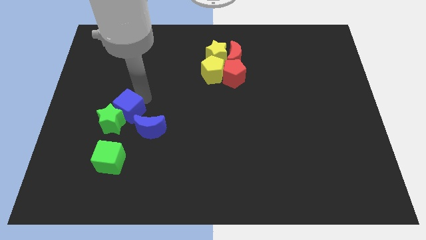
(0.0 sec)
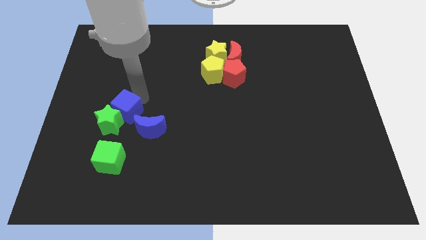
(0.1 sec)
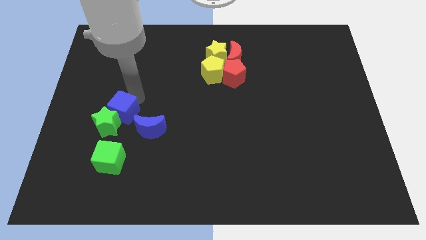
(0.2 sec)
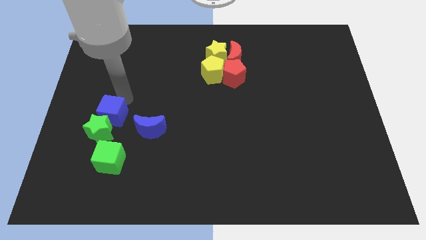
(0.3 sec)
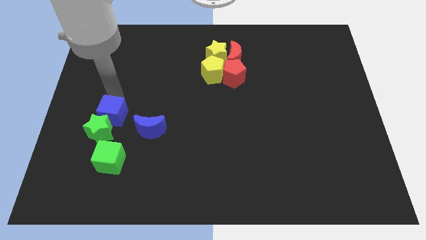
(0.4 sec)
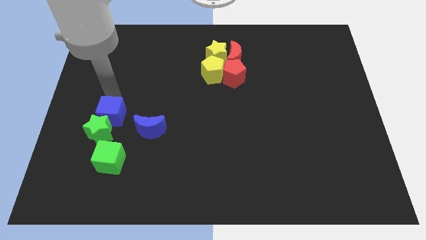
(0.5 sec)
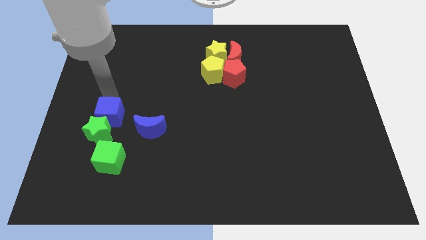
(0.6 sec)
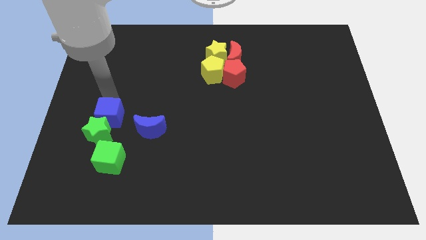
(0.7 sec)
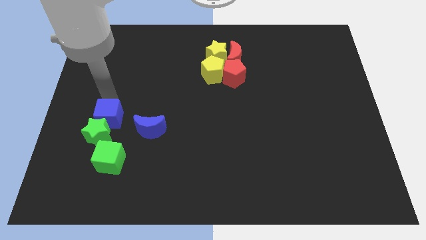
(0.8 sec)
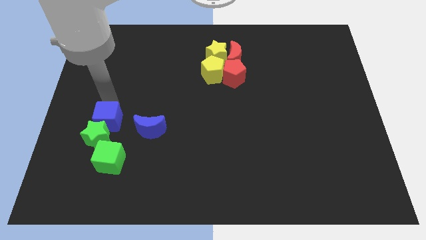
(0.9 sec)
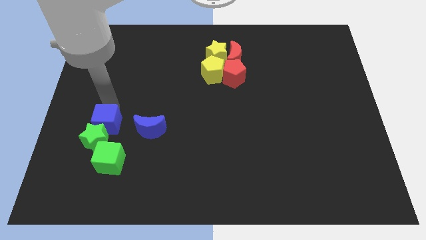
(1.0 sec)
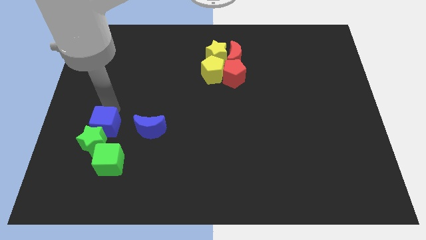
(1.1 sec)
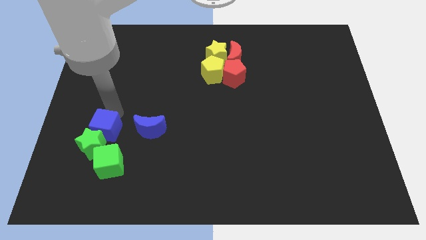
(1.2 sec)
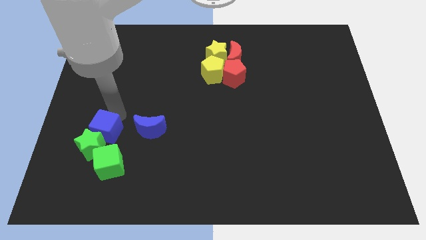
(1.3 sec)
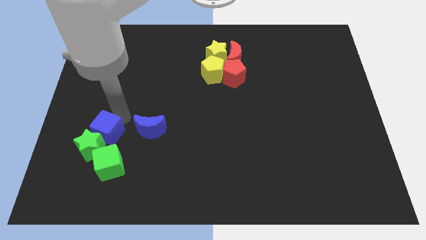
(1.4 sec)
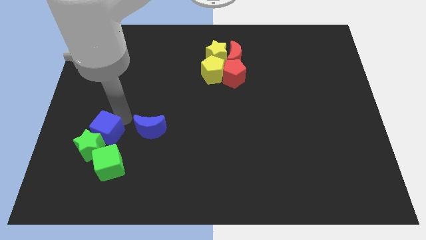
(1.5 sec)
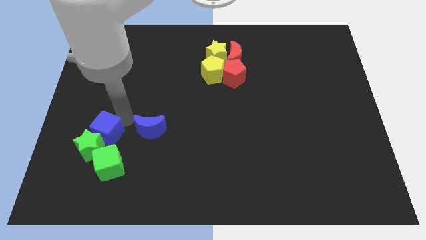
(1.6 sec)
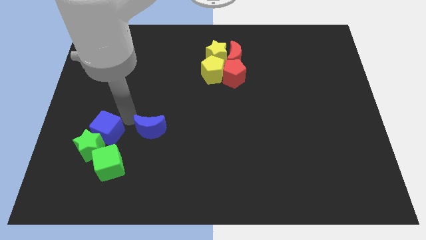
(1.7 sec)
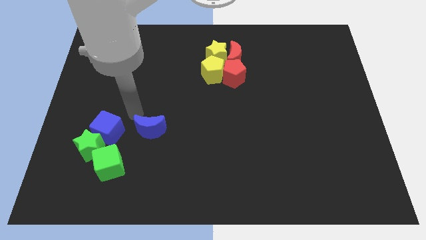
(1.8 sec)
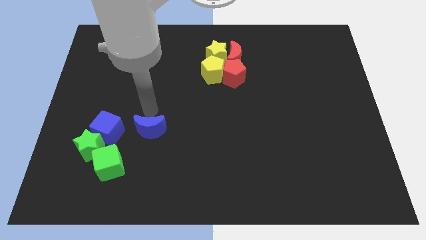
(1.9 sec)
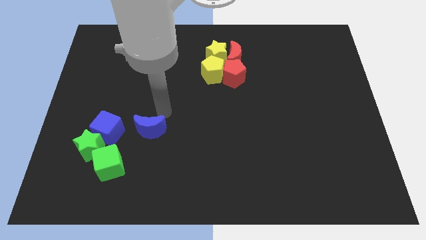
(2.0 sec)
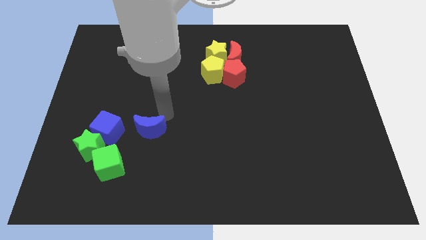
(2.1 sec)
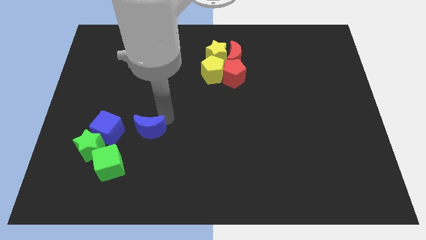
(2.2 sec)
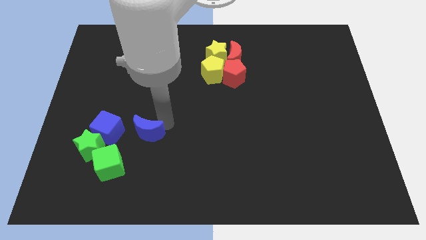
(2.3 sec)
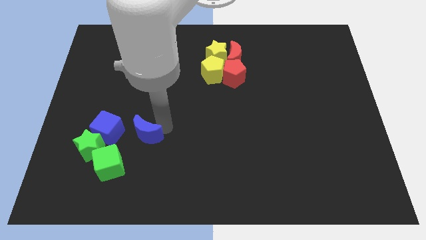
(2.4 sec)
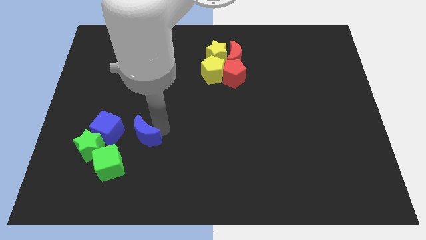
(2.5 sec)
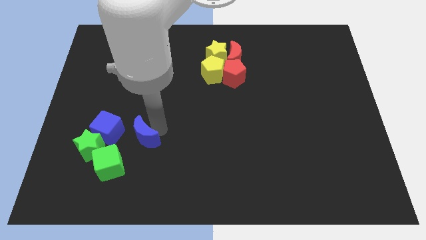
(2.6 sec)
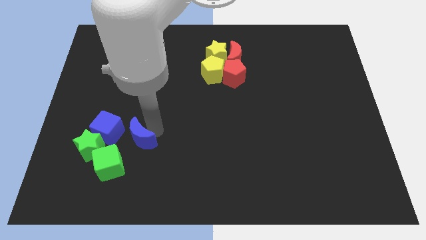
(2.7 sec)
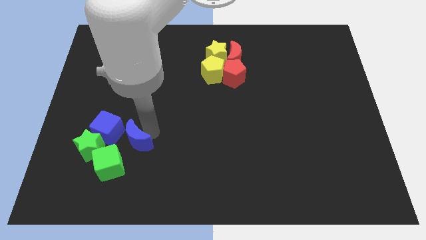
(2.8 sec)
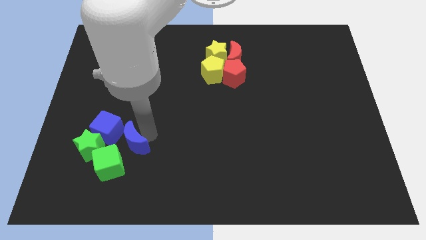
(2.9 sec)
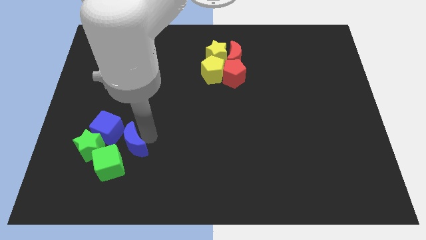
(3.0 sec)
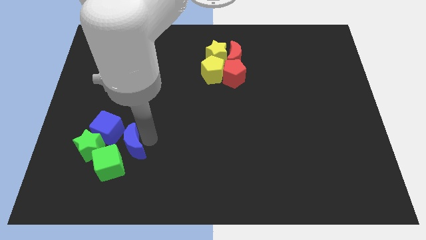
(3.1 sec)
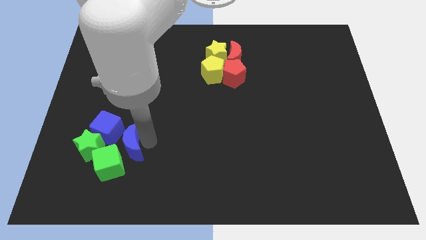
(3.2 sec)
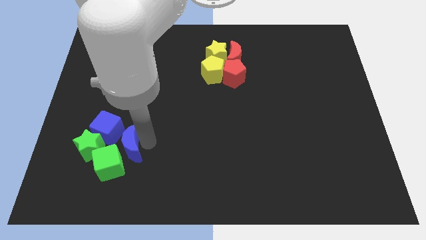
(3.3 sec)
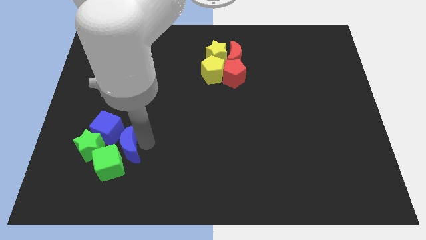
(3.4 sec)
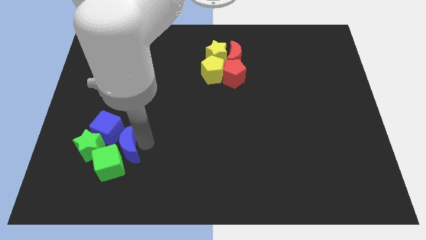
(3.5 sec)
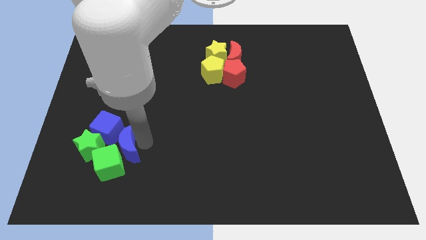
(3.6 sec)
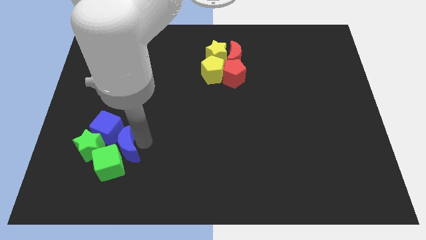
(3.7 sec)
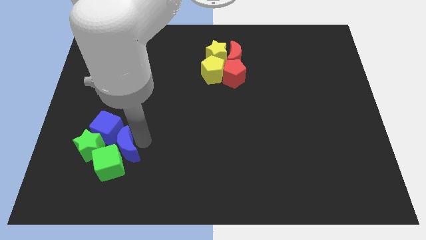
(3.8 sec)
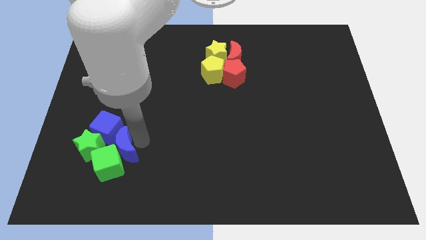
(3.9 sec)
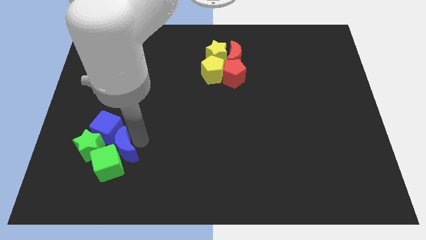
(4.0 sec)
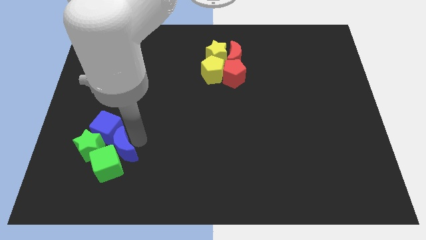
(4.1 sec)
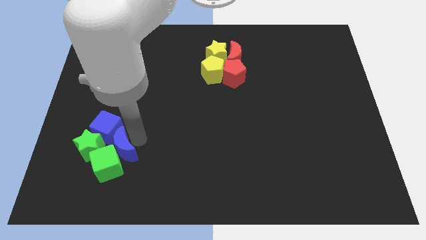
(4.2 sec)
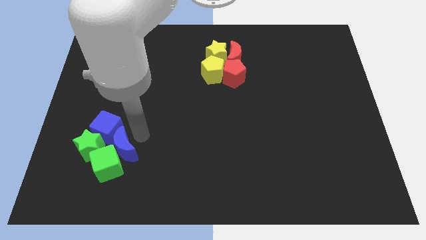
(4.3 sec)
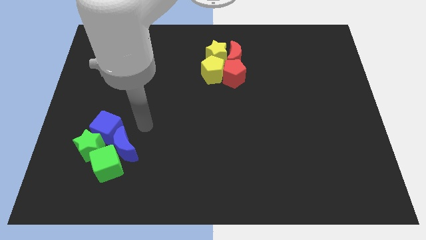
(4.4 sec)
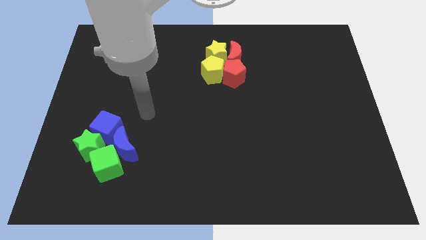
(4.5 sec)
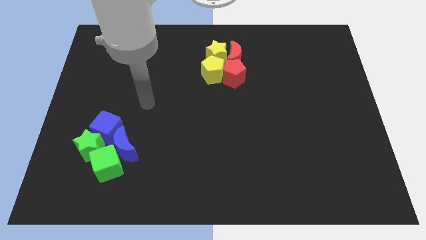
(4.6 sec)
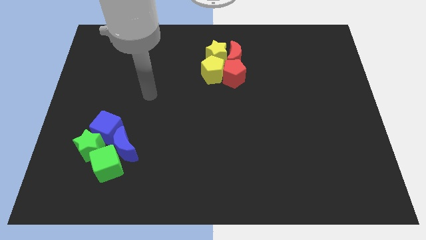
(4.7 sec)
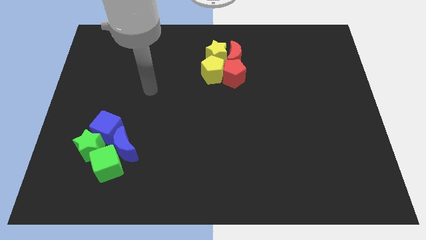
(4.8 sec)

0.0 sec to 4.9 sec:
move the blue and green blocks towards the bottom left of the board

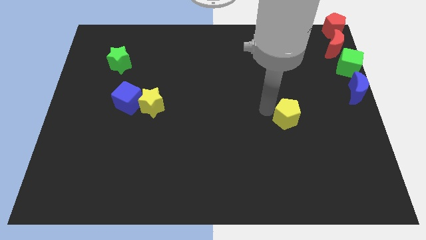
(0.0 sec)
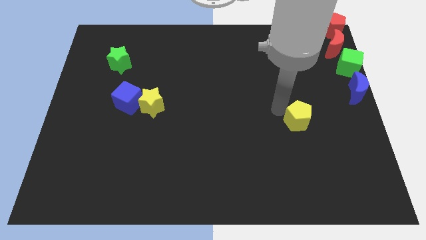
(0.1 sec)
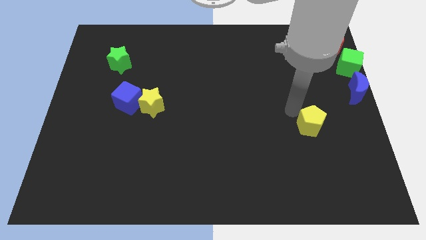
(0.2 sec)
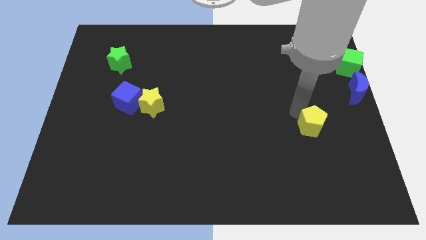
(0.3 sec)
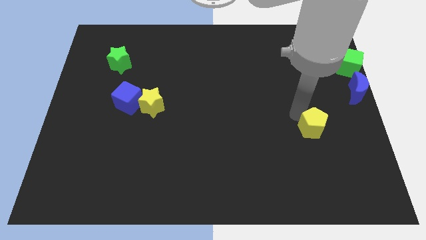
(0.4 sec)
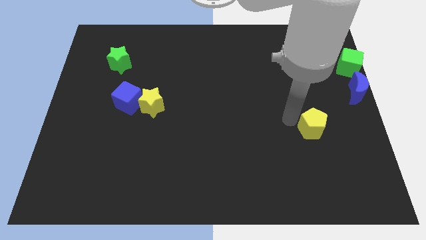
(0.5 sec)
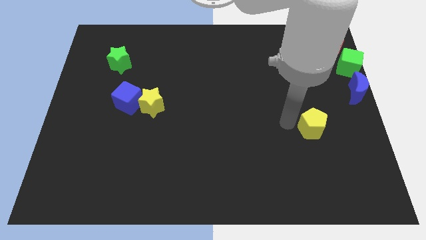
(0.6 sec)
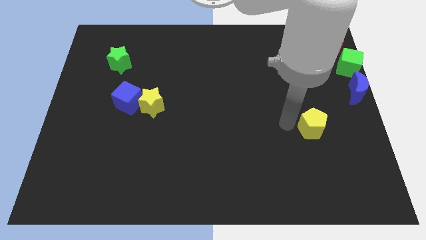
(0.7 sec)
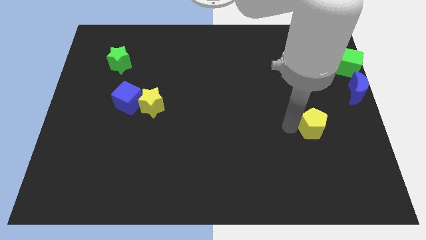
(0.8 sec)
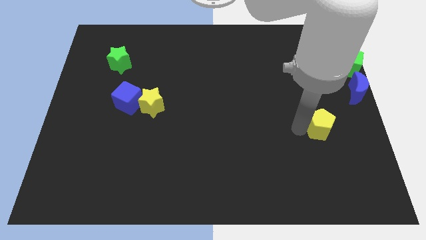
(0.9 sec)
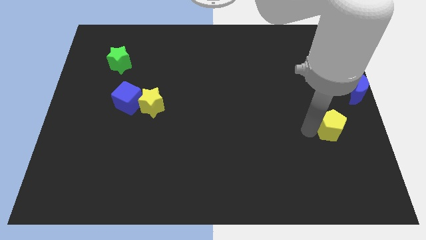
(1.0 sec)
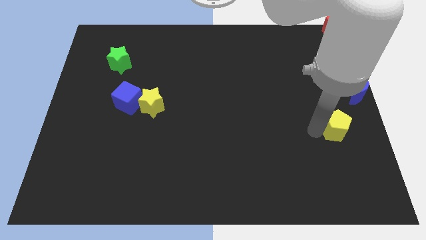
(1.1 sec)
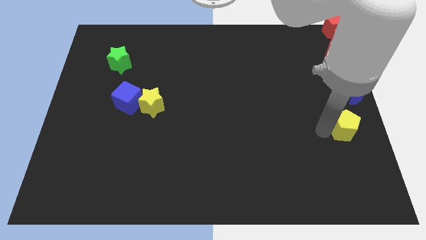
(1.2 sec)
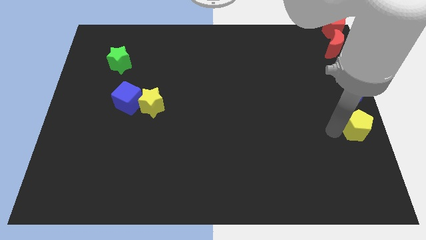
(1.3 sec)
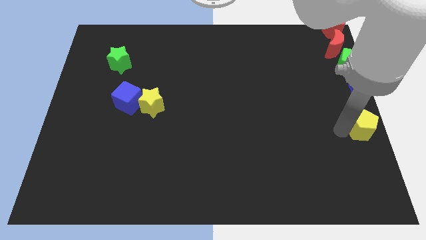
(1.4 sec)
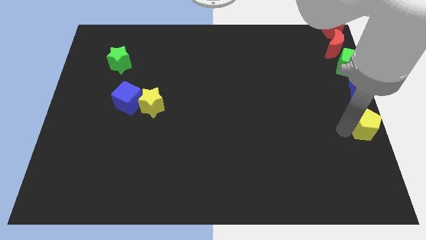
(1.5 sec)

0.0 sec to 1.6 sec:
place the yellow pentagon below the blue moon

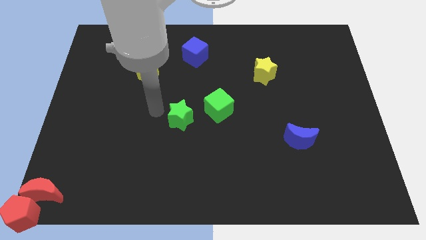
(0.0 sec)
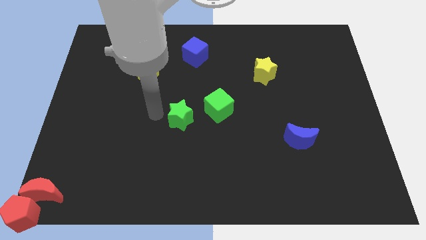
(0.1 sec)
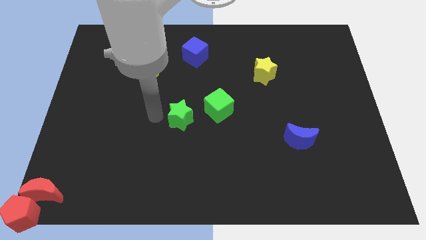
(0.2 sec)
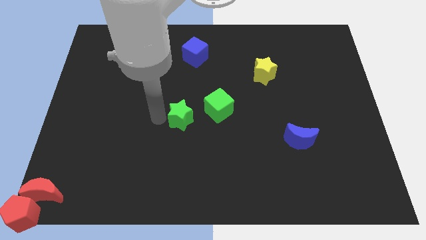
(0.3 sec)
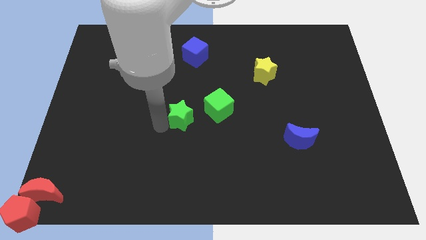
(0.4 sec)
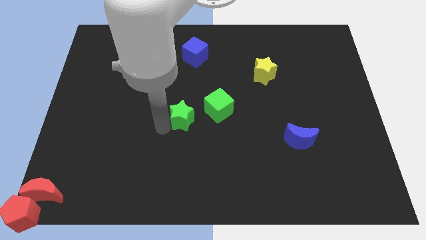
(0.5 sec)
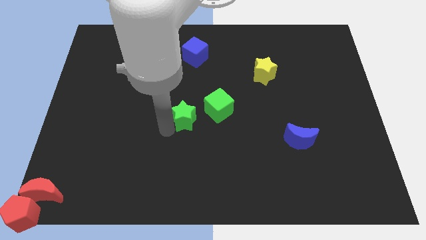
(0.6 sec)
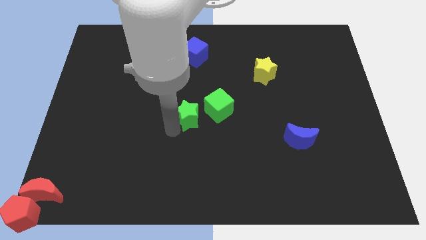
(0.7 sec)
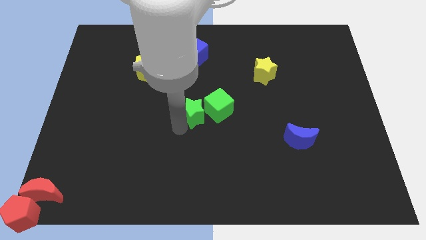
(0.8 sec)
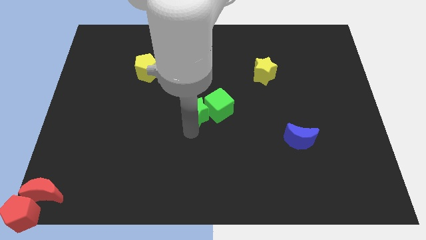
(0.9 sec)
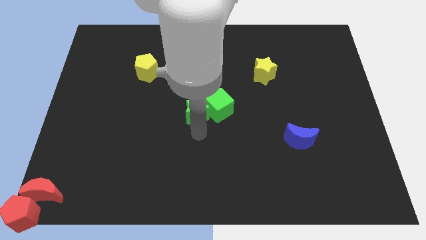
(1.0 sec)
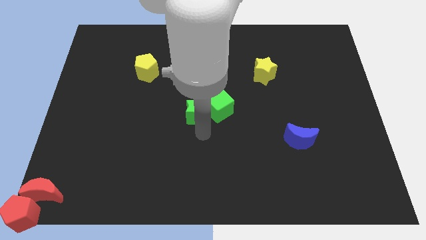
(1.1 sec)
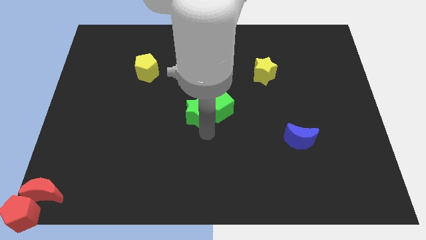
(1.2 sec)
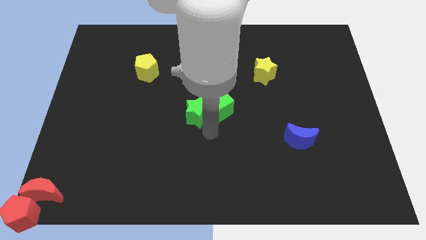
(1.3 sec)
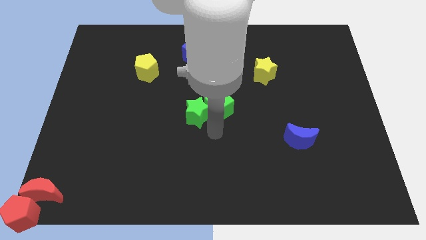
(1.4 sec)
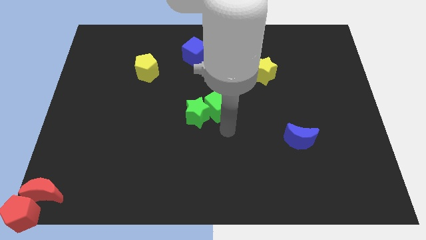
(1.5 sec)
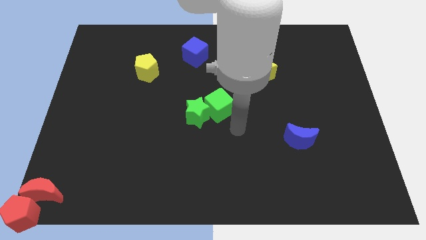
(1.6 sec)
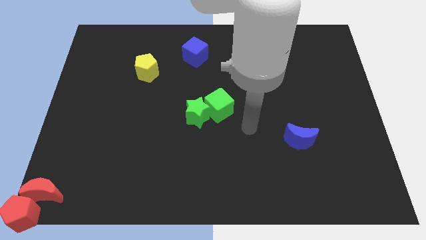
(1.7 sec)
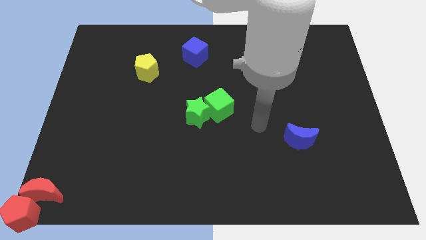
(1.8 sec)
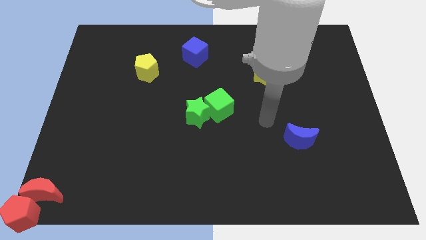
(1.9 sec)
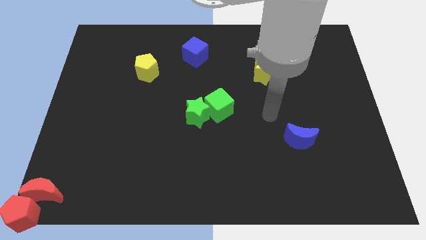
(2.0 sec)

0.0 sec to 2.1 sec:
push green star close to green cube

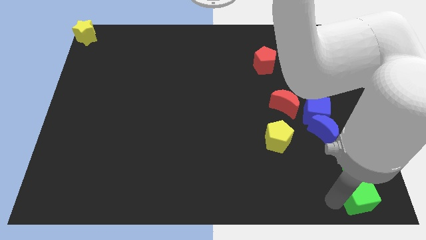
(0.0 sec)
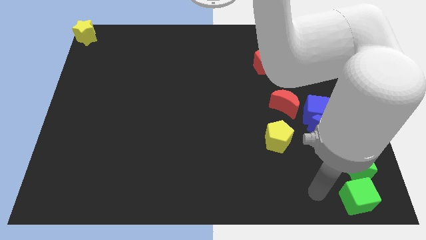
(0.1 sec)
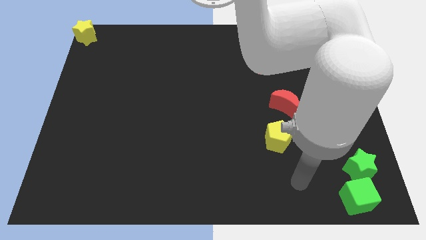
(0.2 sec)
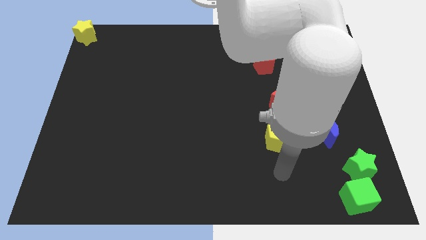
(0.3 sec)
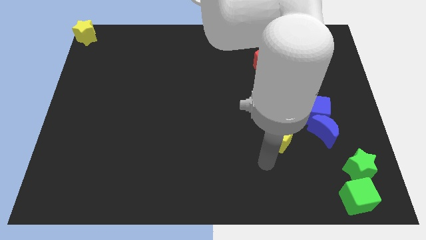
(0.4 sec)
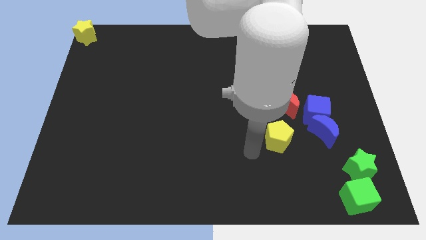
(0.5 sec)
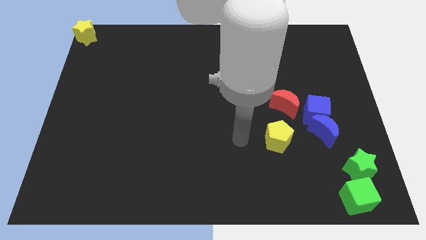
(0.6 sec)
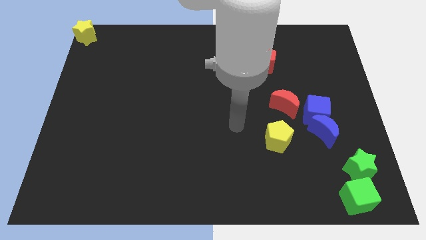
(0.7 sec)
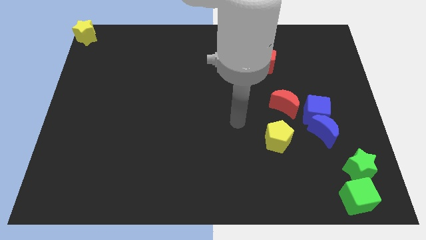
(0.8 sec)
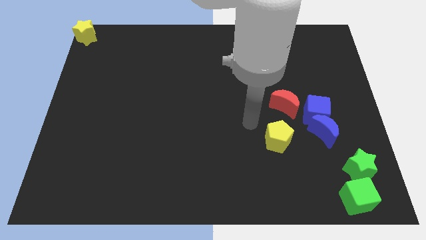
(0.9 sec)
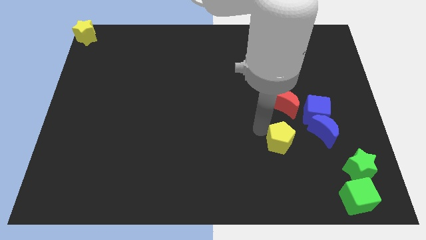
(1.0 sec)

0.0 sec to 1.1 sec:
tap the top left side of the yellow pentagon
